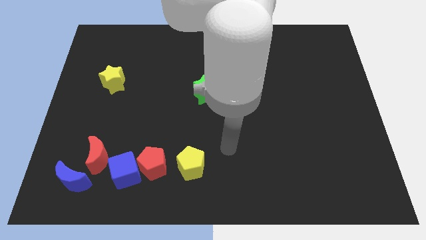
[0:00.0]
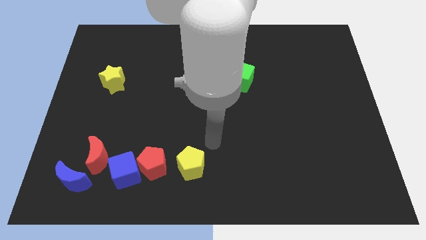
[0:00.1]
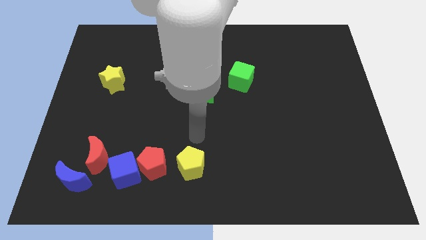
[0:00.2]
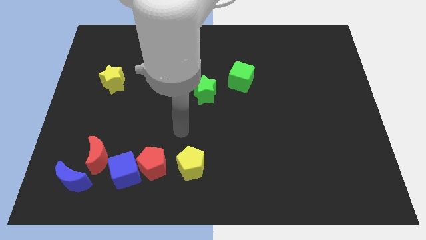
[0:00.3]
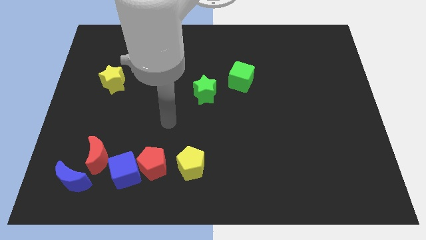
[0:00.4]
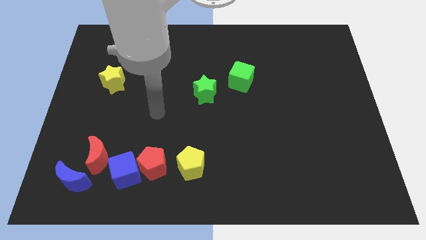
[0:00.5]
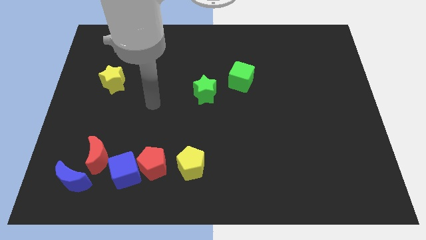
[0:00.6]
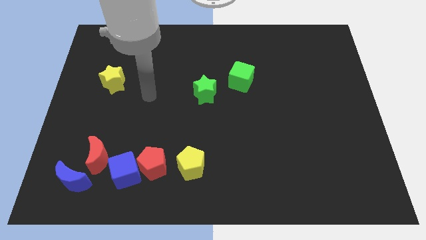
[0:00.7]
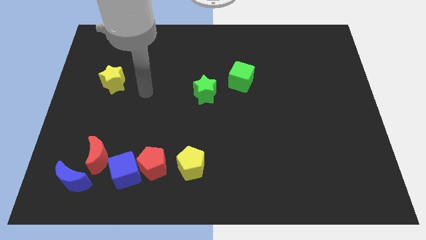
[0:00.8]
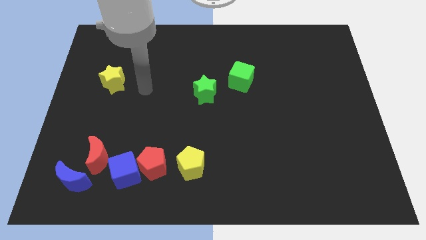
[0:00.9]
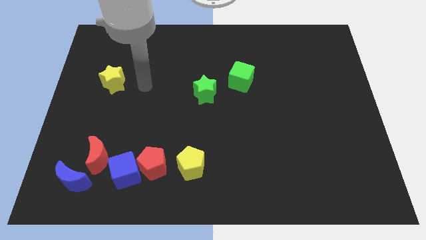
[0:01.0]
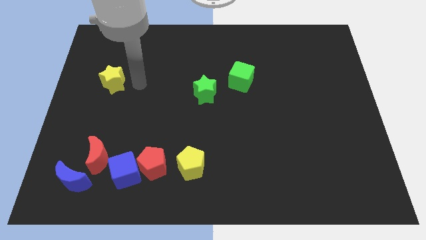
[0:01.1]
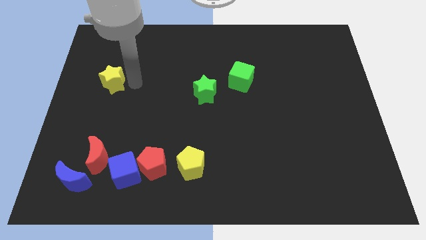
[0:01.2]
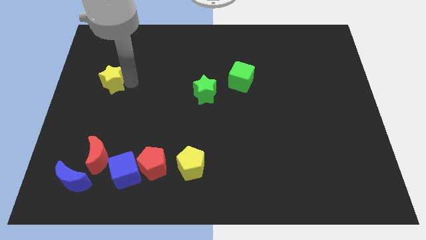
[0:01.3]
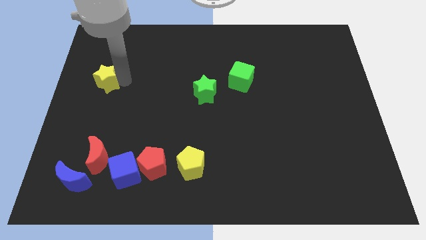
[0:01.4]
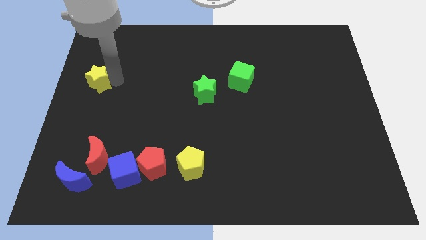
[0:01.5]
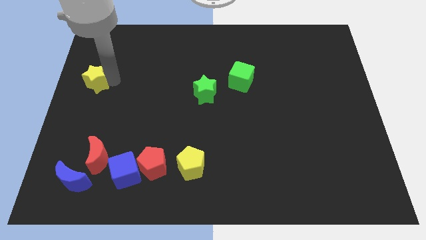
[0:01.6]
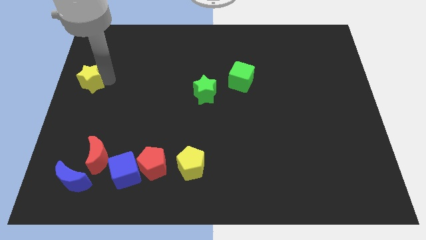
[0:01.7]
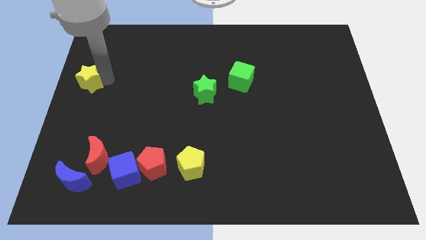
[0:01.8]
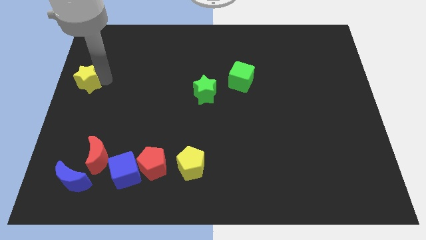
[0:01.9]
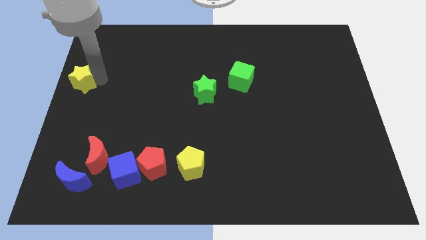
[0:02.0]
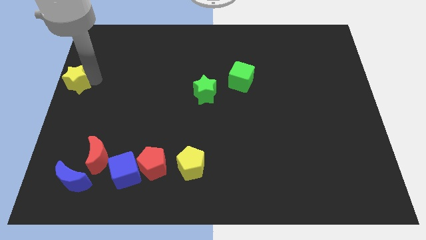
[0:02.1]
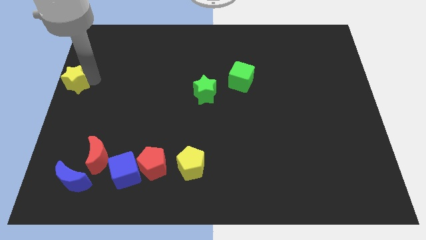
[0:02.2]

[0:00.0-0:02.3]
push the yellow star towards the left side of the board

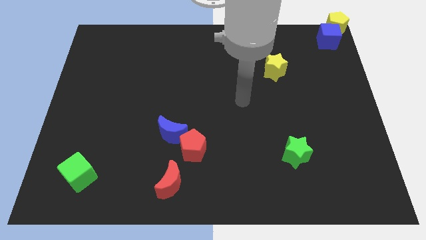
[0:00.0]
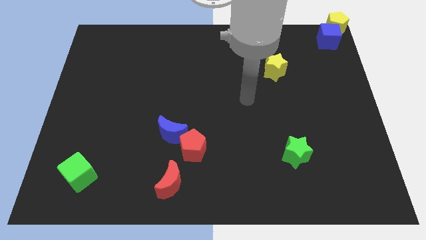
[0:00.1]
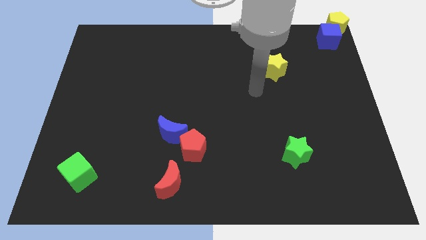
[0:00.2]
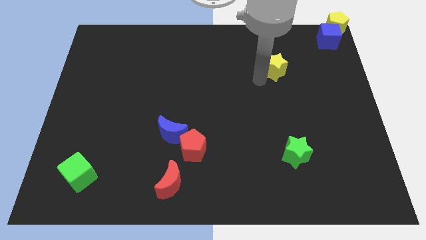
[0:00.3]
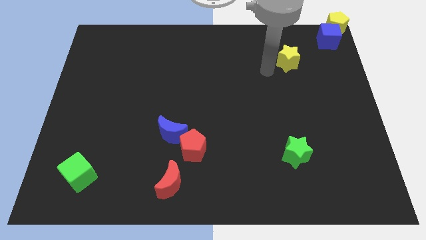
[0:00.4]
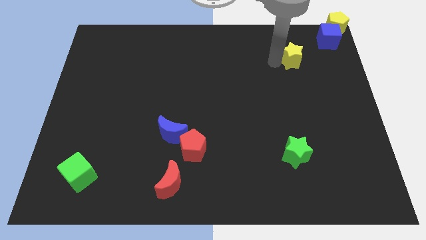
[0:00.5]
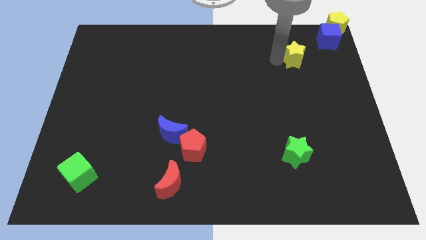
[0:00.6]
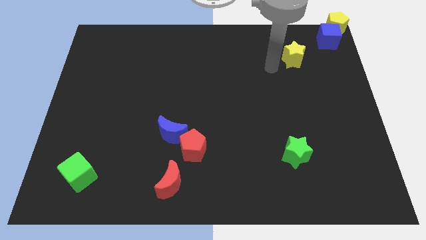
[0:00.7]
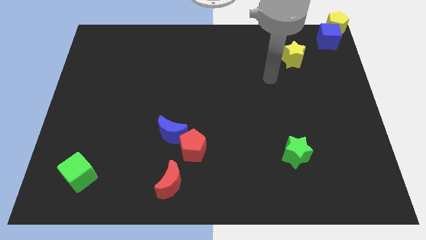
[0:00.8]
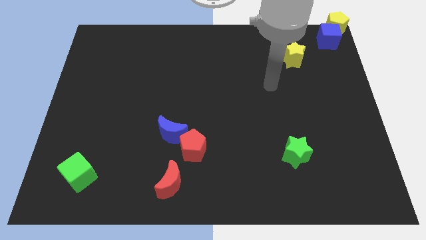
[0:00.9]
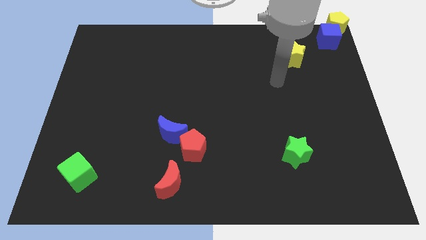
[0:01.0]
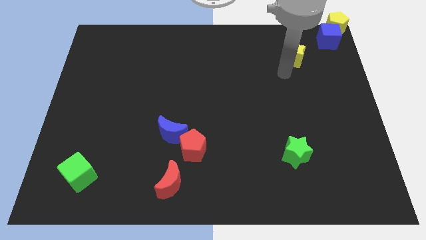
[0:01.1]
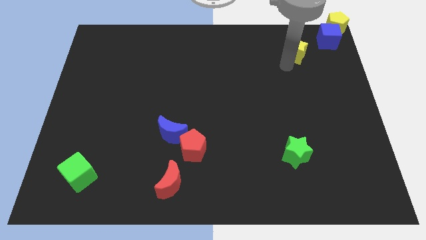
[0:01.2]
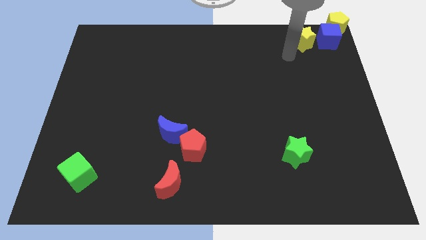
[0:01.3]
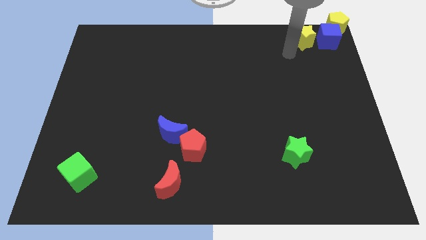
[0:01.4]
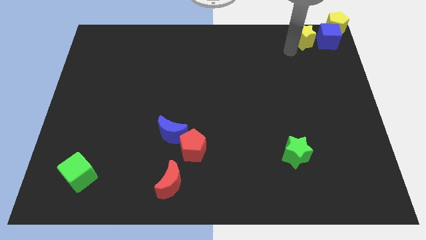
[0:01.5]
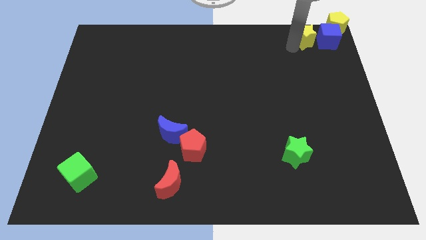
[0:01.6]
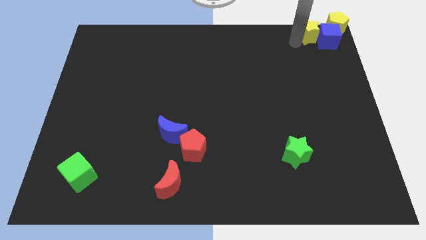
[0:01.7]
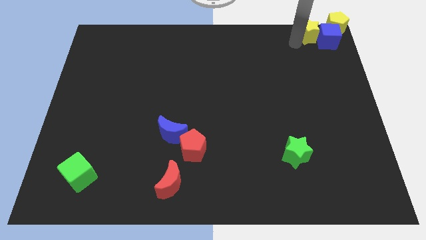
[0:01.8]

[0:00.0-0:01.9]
push the yellow star into the blue cube

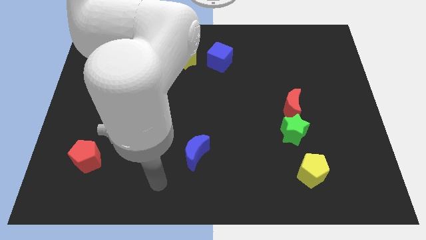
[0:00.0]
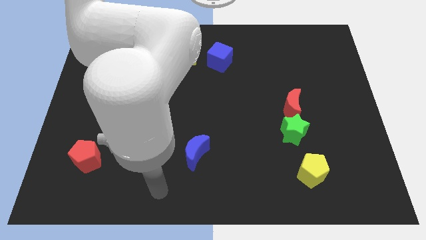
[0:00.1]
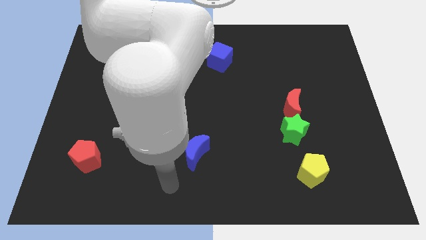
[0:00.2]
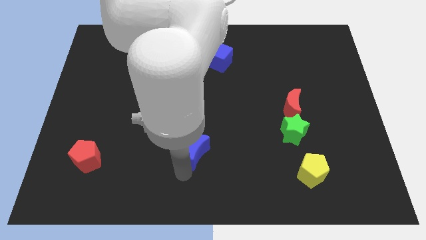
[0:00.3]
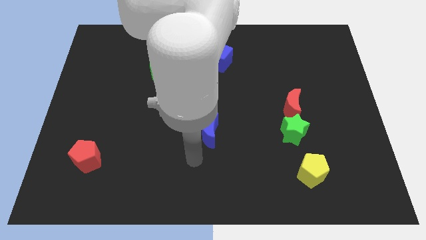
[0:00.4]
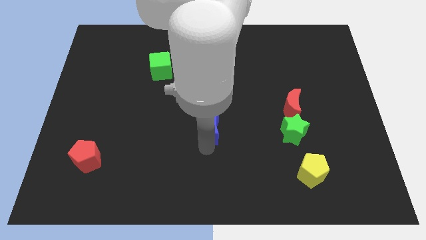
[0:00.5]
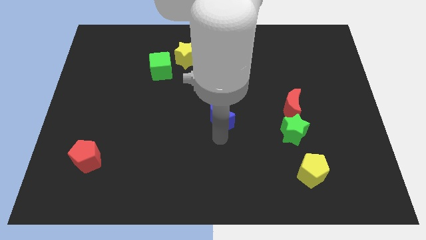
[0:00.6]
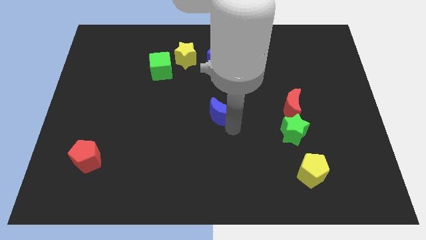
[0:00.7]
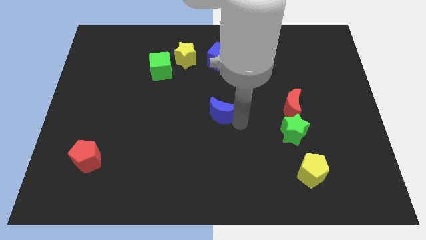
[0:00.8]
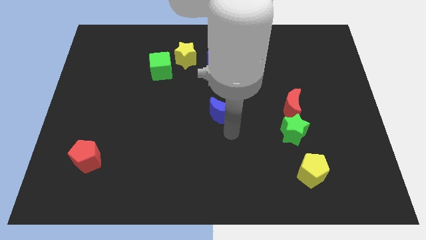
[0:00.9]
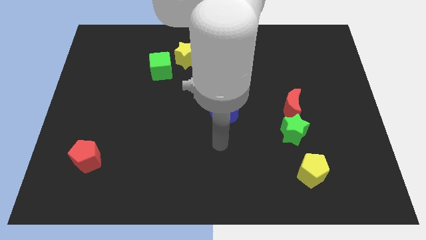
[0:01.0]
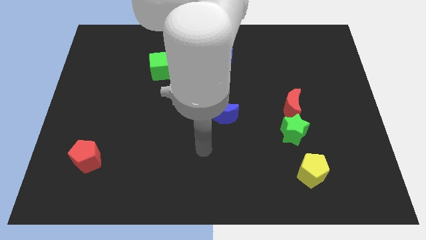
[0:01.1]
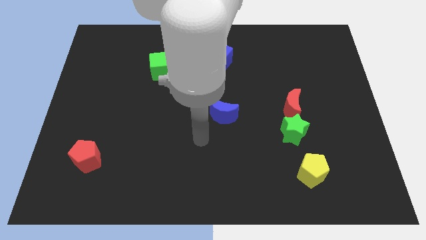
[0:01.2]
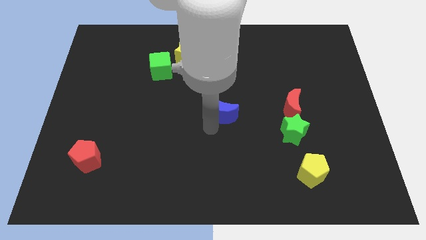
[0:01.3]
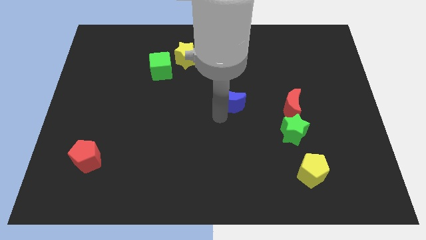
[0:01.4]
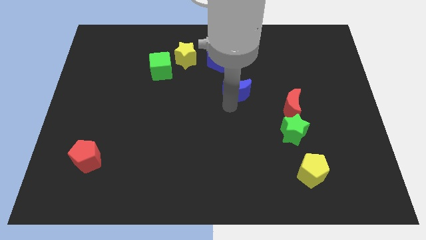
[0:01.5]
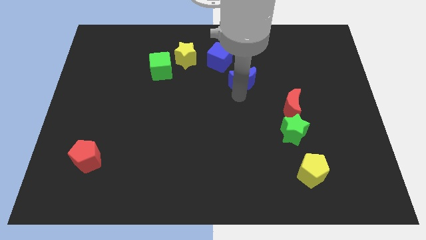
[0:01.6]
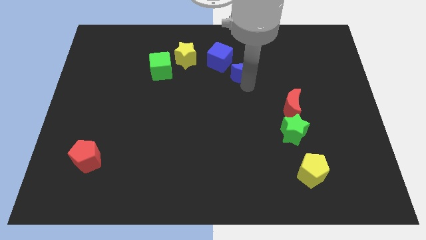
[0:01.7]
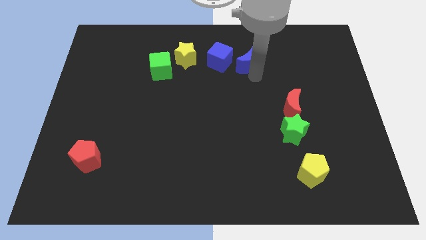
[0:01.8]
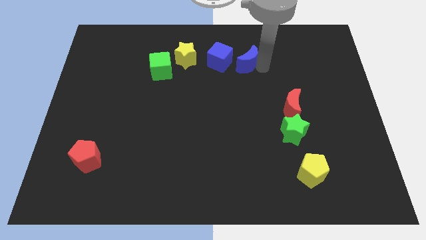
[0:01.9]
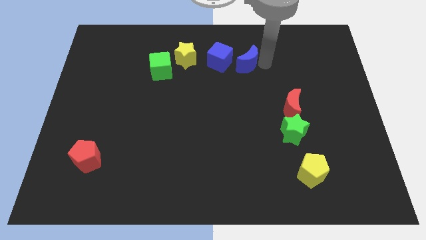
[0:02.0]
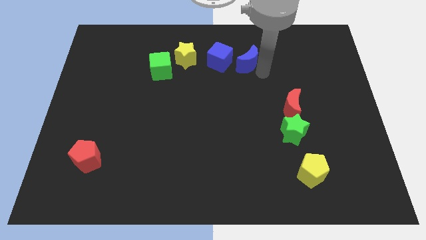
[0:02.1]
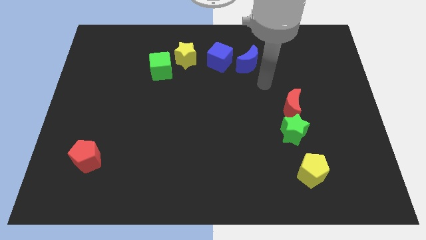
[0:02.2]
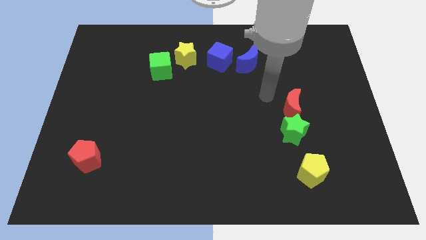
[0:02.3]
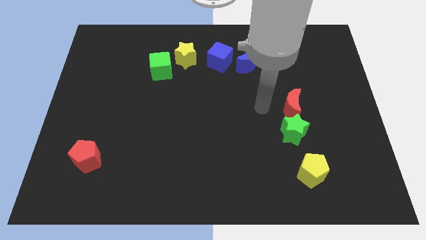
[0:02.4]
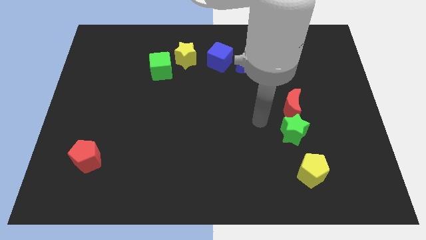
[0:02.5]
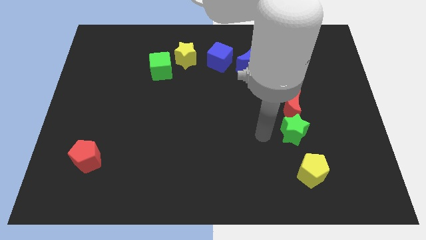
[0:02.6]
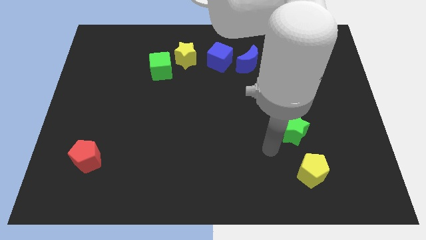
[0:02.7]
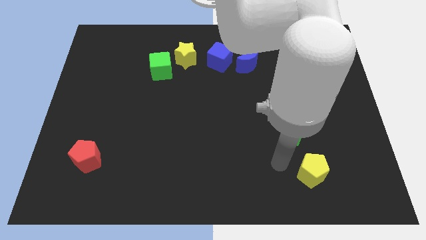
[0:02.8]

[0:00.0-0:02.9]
move the blue moon to the right of the blue cube

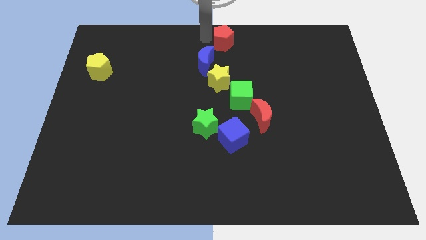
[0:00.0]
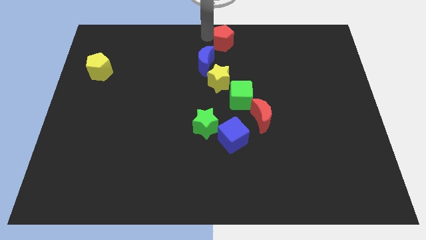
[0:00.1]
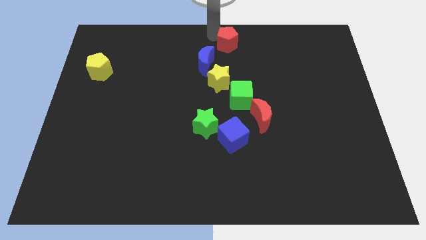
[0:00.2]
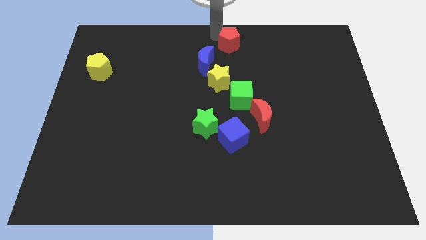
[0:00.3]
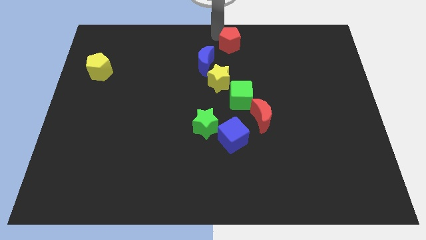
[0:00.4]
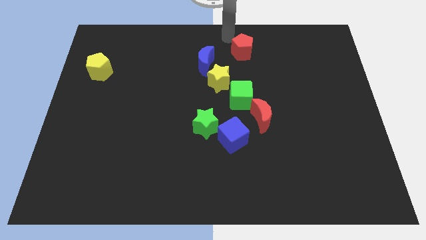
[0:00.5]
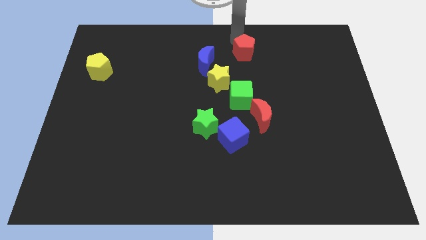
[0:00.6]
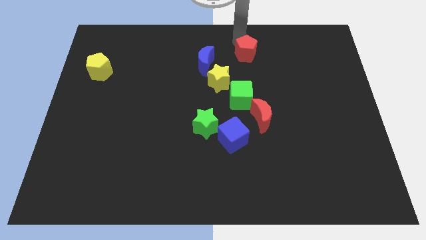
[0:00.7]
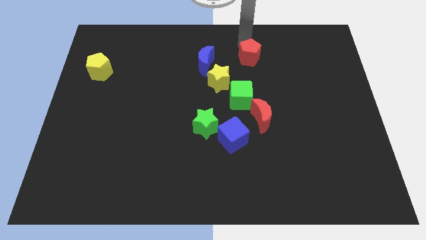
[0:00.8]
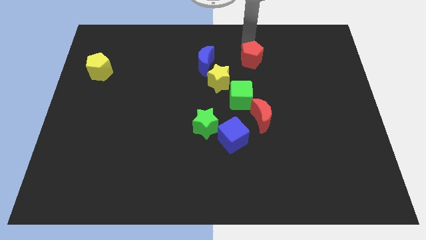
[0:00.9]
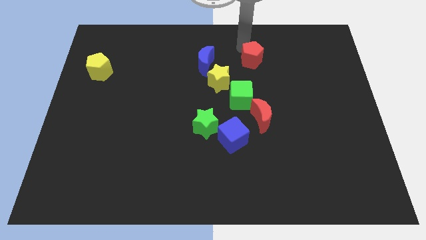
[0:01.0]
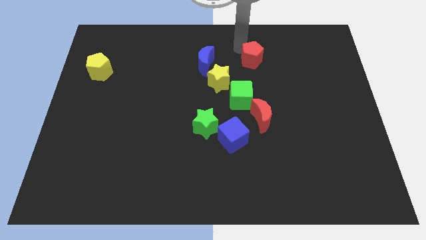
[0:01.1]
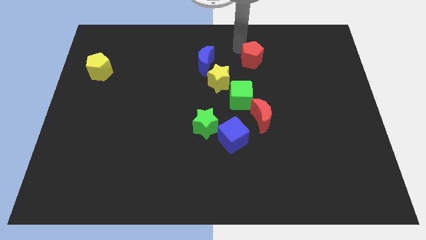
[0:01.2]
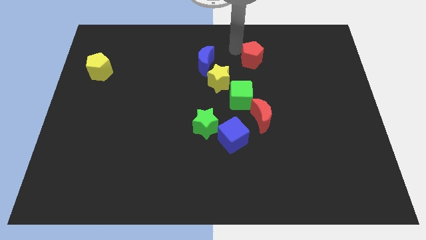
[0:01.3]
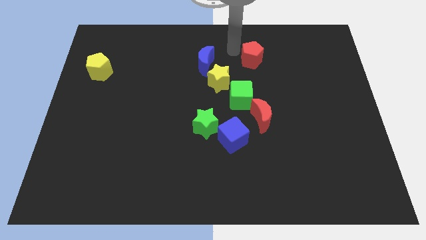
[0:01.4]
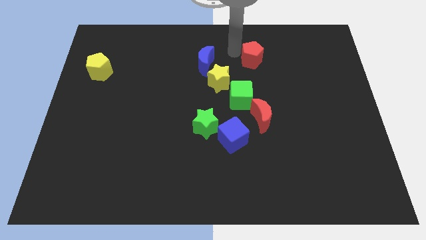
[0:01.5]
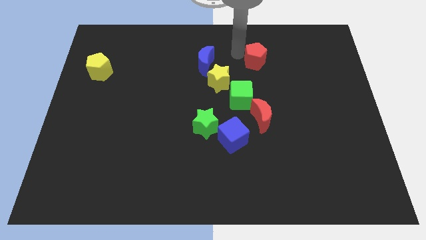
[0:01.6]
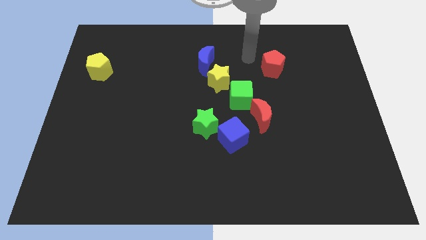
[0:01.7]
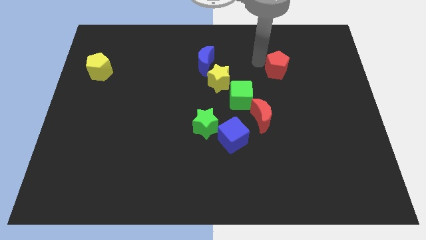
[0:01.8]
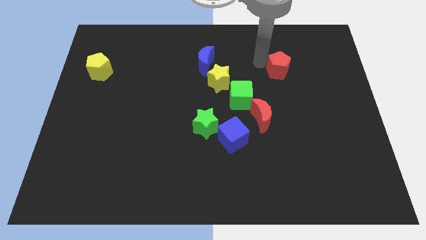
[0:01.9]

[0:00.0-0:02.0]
put the red pentagon diagonal to the green cube

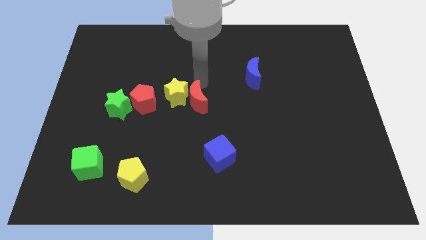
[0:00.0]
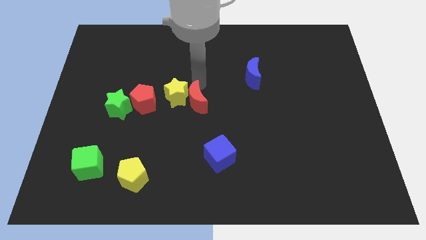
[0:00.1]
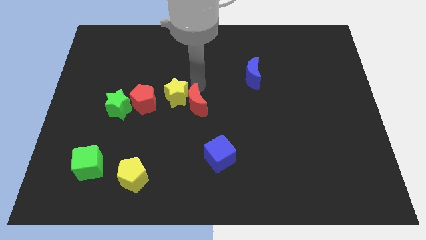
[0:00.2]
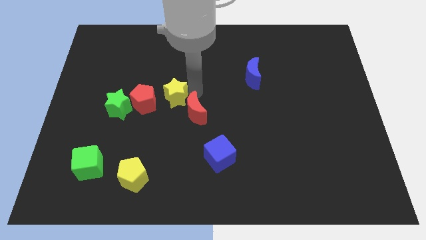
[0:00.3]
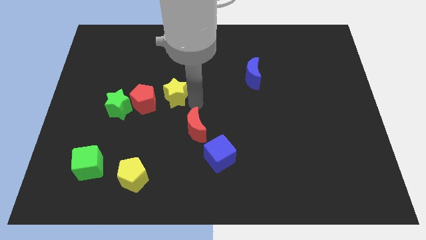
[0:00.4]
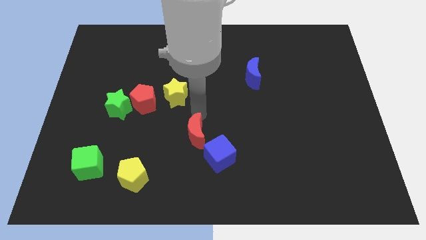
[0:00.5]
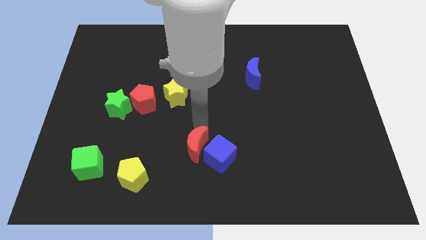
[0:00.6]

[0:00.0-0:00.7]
push the red crescent to the left of the blue cube
